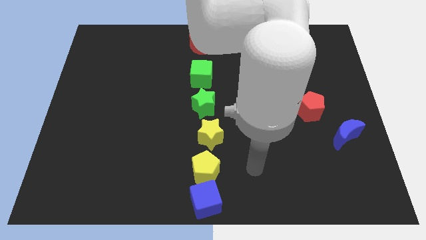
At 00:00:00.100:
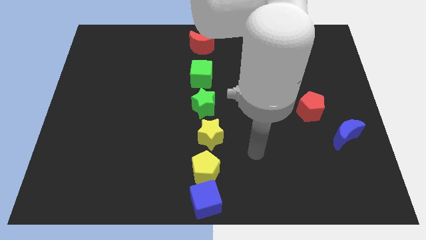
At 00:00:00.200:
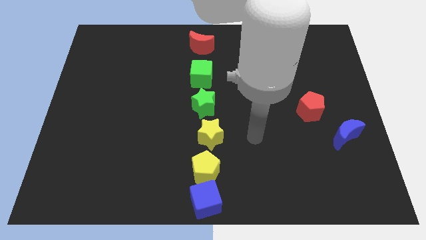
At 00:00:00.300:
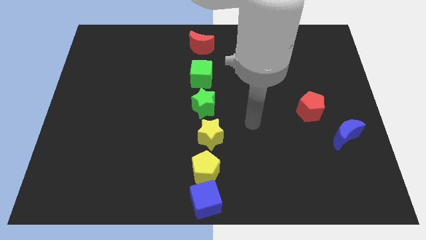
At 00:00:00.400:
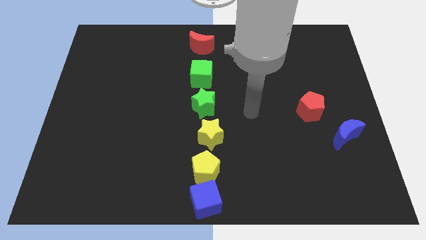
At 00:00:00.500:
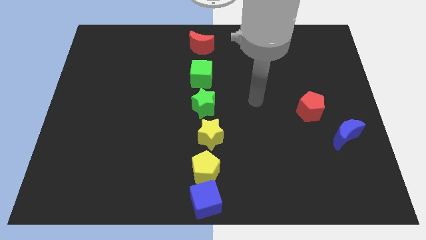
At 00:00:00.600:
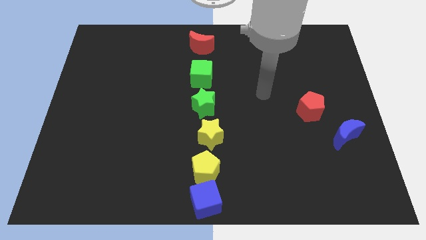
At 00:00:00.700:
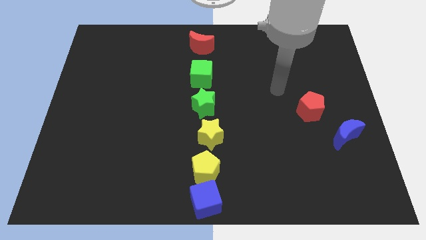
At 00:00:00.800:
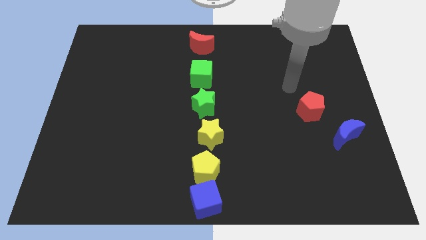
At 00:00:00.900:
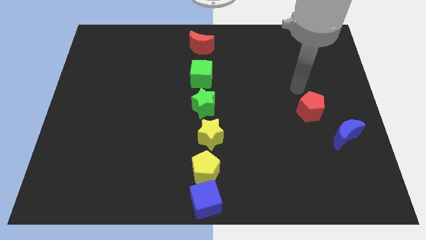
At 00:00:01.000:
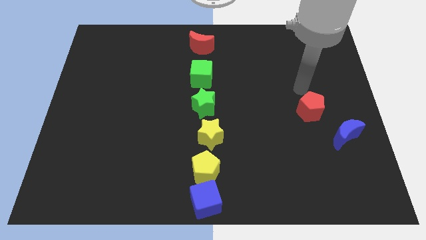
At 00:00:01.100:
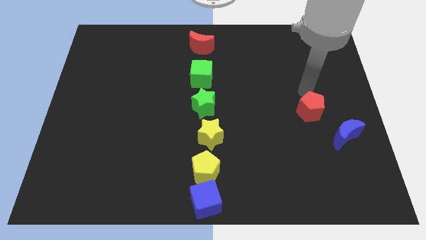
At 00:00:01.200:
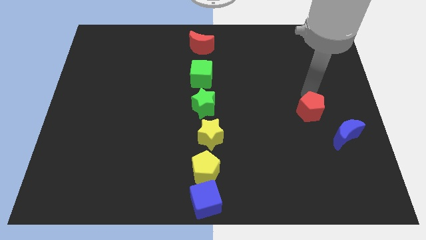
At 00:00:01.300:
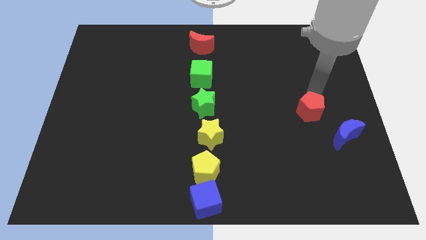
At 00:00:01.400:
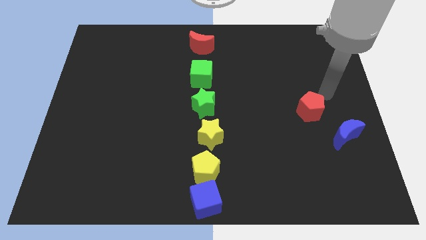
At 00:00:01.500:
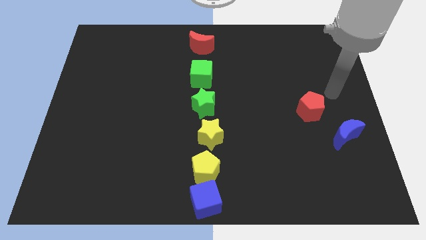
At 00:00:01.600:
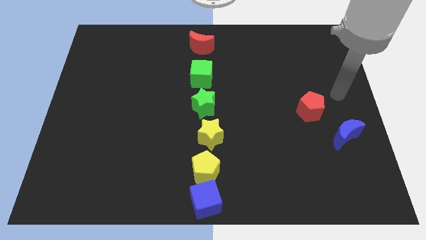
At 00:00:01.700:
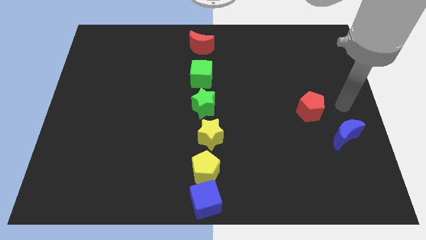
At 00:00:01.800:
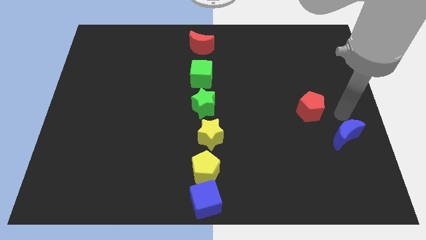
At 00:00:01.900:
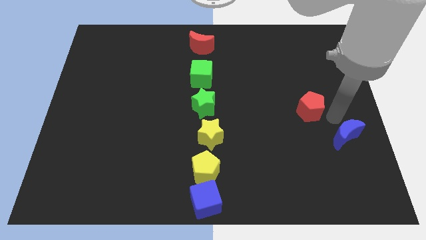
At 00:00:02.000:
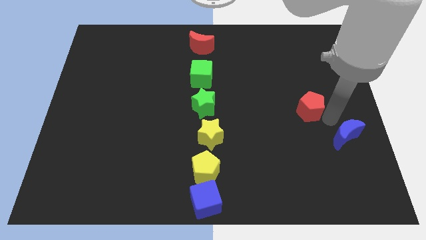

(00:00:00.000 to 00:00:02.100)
place your arm in between the red pentagon and blue crescent

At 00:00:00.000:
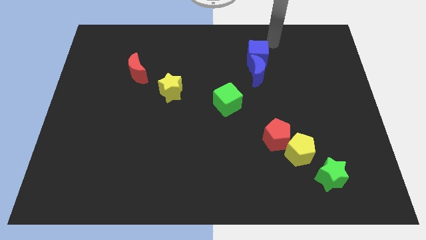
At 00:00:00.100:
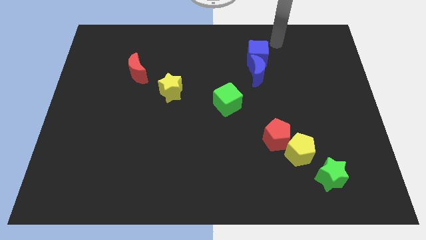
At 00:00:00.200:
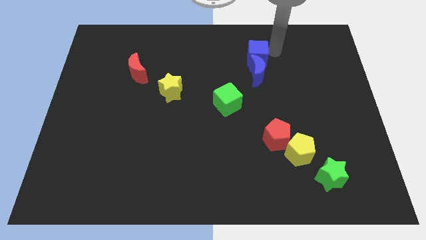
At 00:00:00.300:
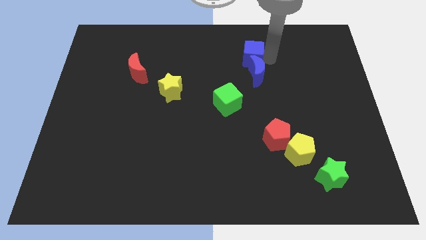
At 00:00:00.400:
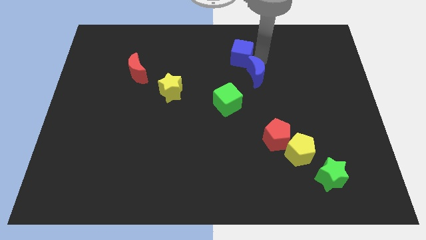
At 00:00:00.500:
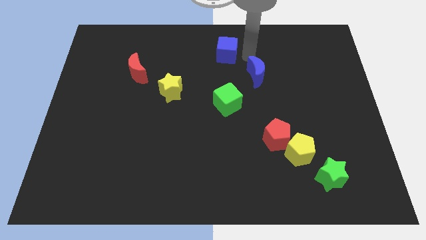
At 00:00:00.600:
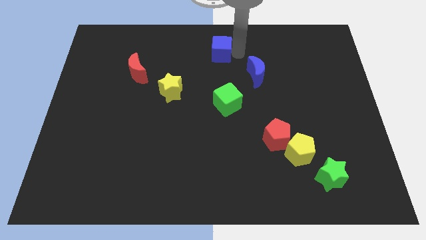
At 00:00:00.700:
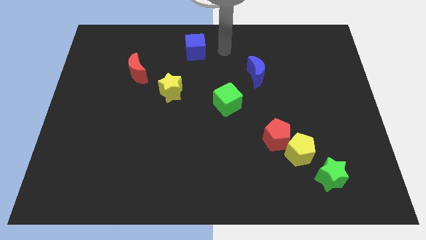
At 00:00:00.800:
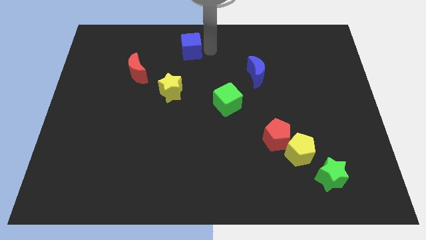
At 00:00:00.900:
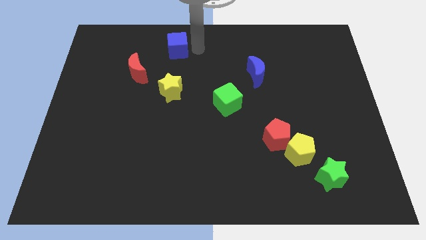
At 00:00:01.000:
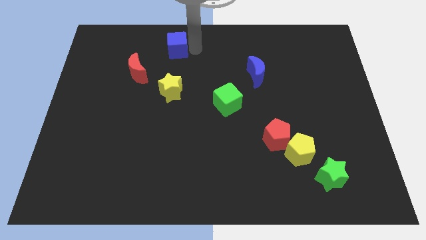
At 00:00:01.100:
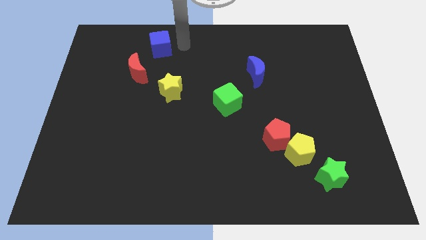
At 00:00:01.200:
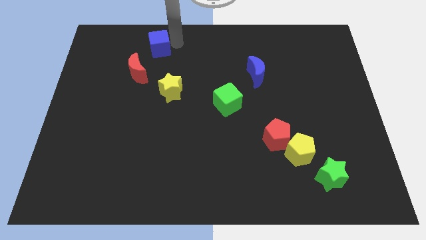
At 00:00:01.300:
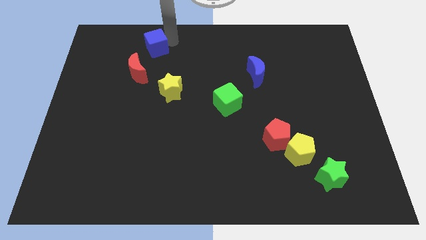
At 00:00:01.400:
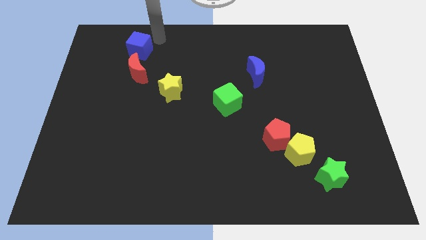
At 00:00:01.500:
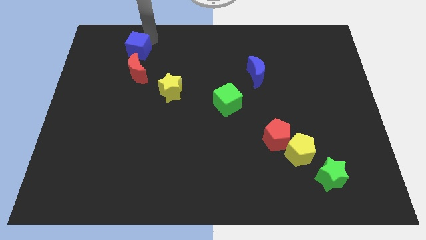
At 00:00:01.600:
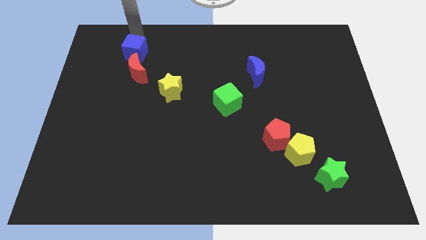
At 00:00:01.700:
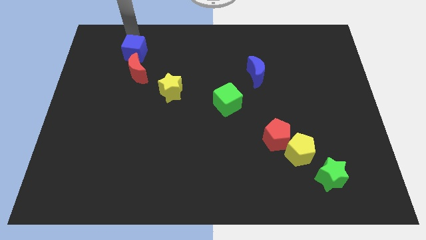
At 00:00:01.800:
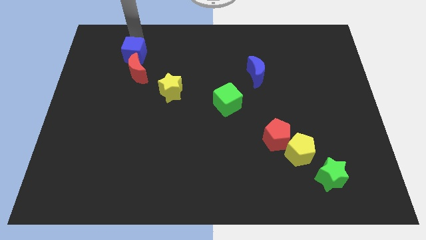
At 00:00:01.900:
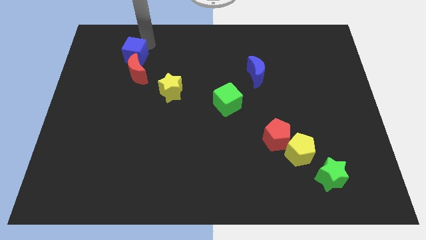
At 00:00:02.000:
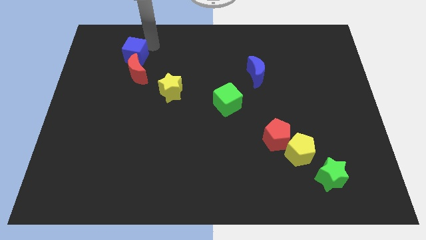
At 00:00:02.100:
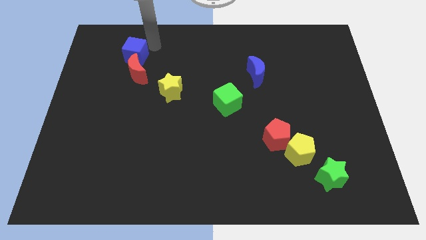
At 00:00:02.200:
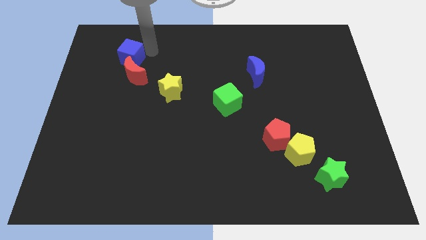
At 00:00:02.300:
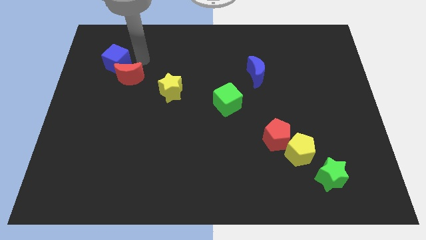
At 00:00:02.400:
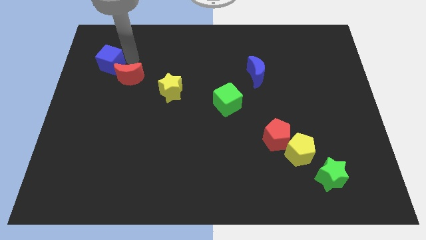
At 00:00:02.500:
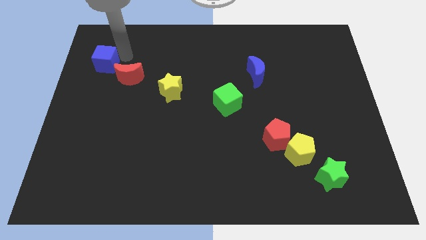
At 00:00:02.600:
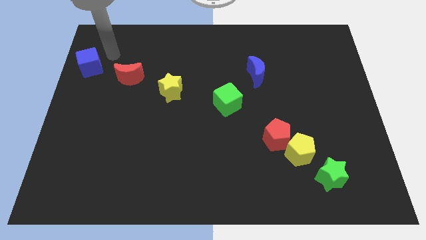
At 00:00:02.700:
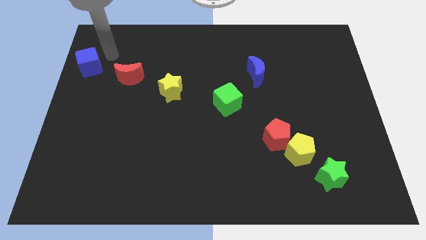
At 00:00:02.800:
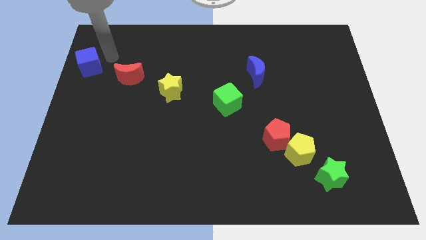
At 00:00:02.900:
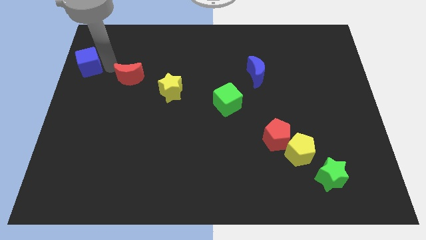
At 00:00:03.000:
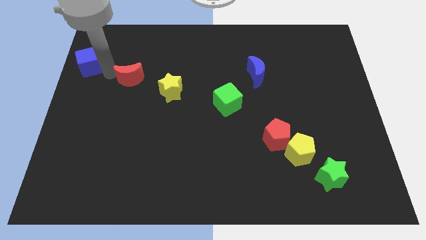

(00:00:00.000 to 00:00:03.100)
move blue cube towards the red moon

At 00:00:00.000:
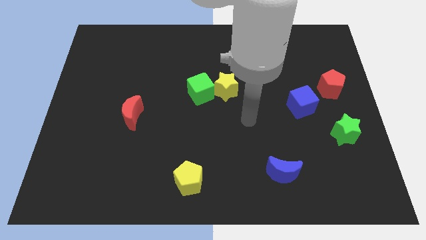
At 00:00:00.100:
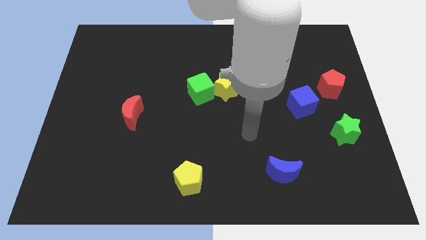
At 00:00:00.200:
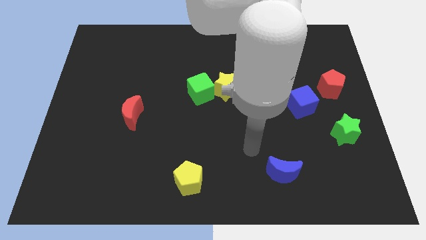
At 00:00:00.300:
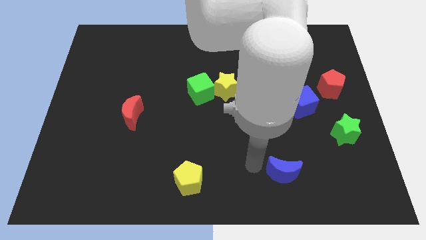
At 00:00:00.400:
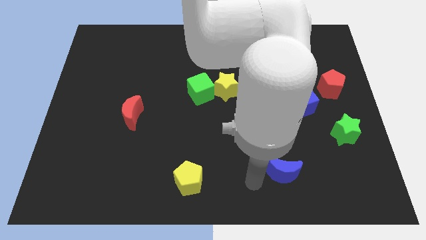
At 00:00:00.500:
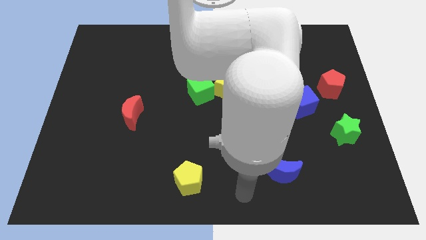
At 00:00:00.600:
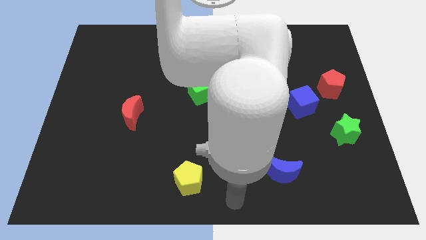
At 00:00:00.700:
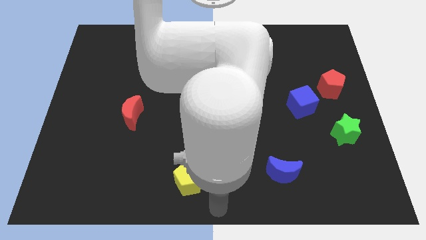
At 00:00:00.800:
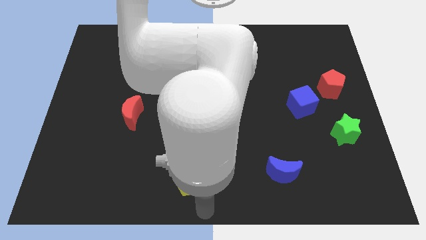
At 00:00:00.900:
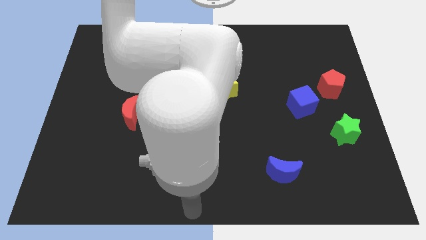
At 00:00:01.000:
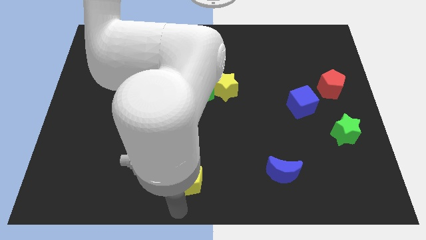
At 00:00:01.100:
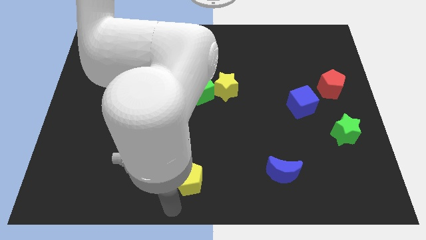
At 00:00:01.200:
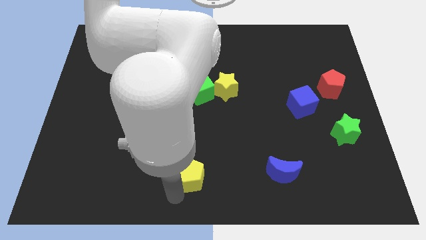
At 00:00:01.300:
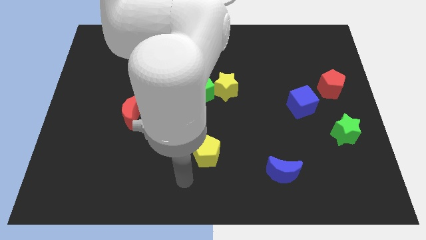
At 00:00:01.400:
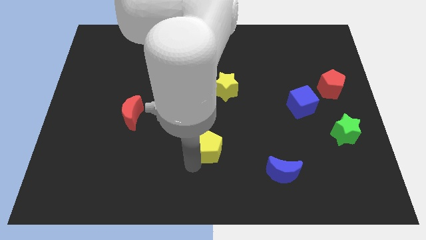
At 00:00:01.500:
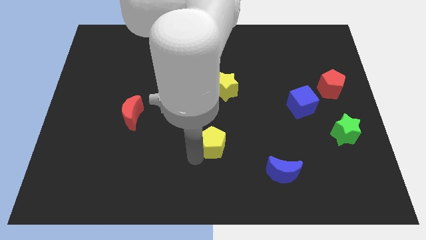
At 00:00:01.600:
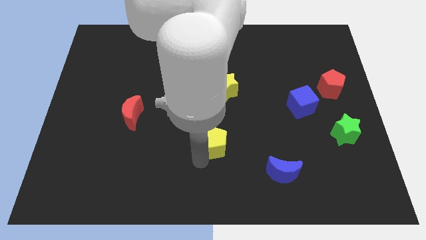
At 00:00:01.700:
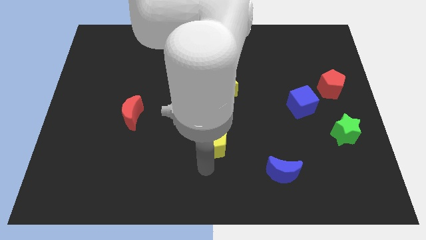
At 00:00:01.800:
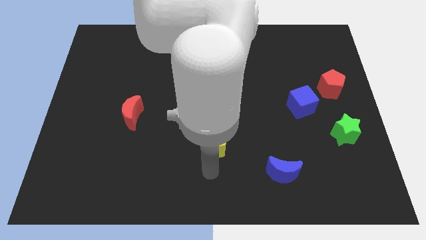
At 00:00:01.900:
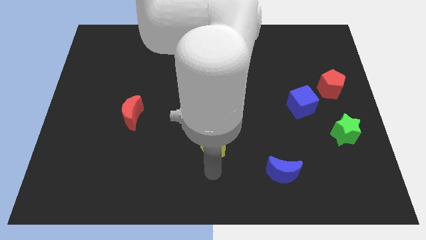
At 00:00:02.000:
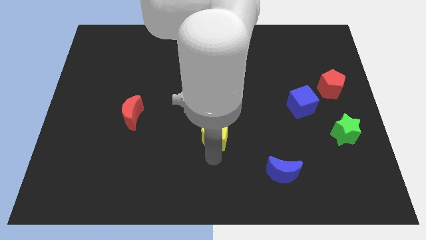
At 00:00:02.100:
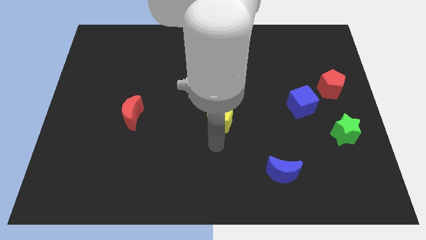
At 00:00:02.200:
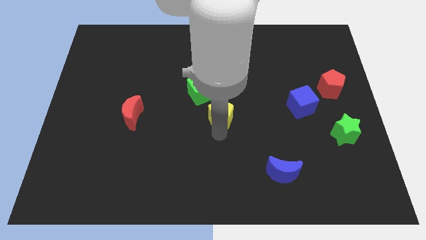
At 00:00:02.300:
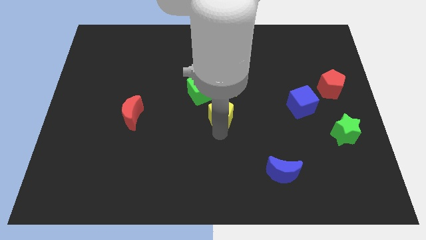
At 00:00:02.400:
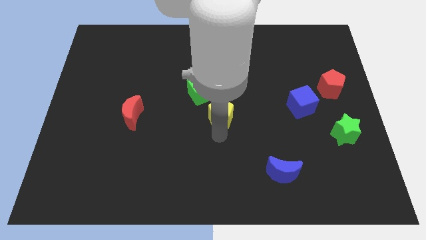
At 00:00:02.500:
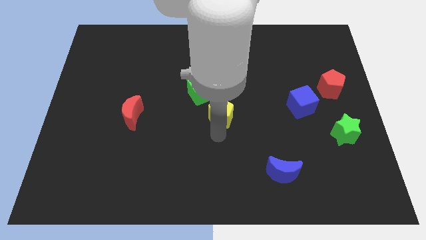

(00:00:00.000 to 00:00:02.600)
move the yellow pentagon below yellow star

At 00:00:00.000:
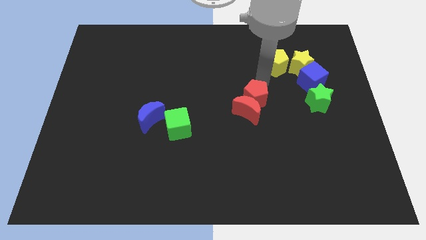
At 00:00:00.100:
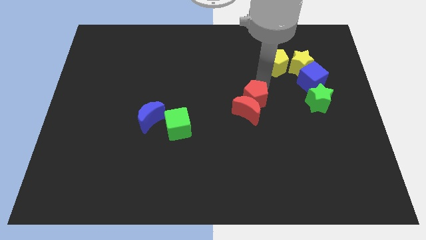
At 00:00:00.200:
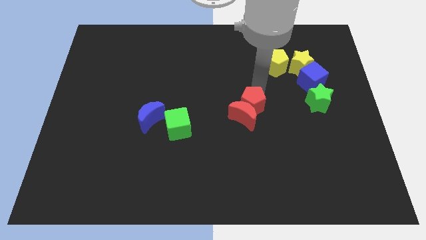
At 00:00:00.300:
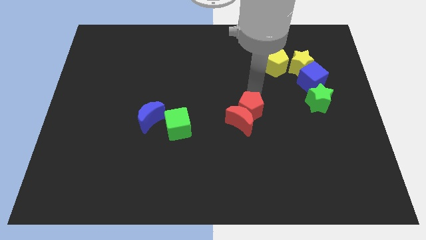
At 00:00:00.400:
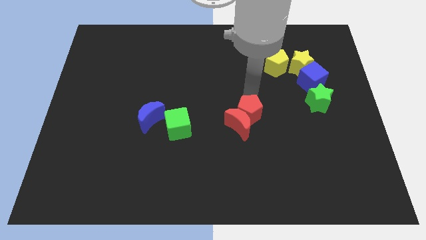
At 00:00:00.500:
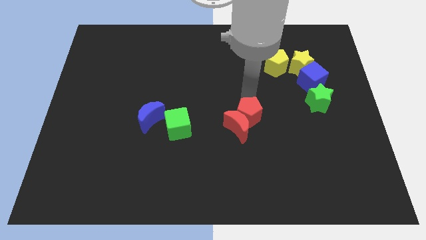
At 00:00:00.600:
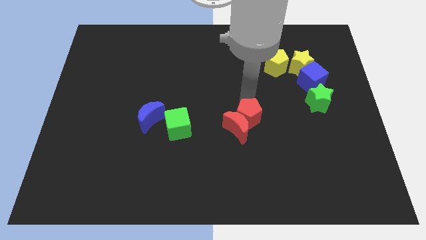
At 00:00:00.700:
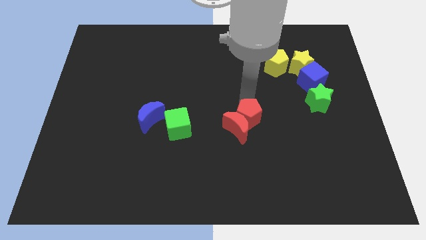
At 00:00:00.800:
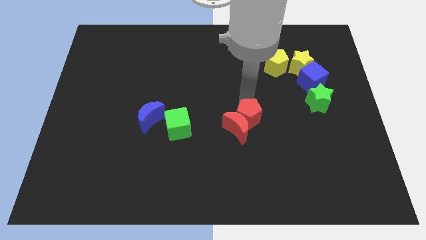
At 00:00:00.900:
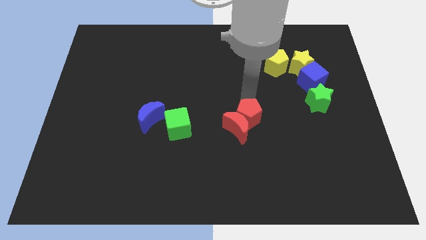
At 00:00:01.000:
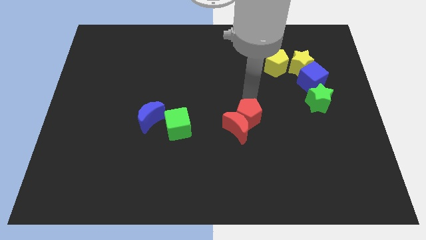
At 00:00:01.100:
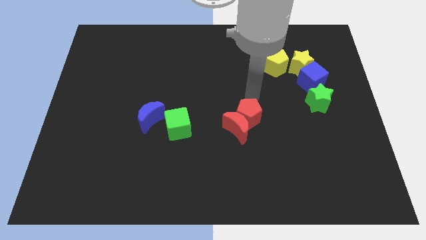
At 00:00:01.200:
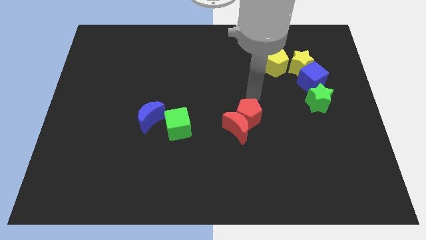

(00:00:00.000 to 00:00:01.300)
place the red blocks to the right side of the green cube
